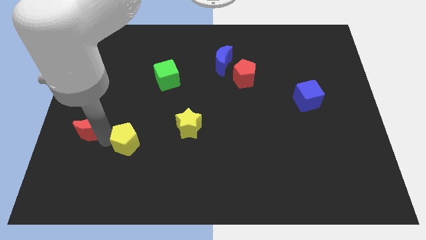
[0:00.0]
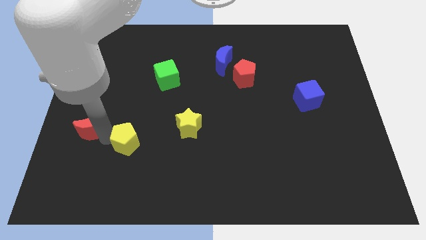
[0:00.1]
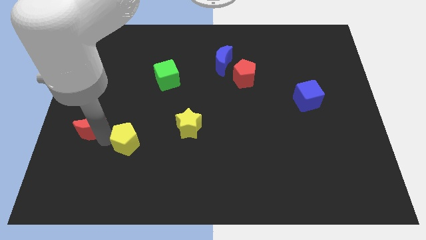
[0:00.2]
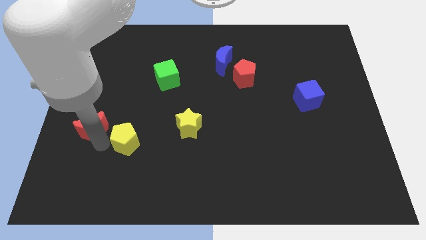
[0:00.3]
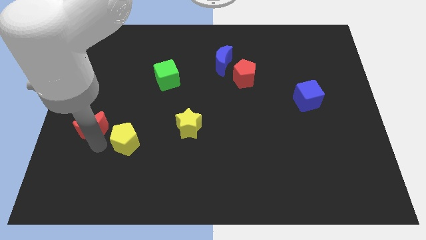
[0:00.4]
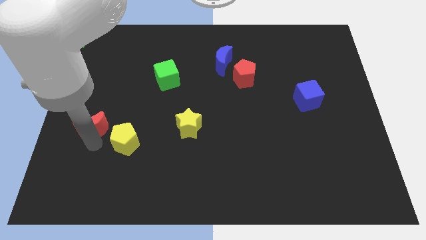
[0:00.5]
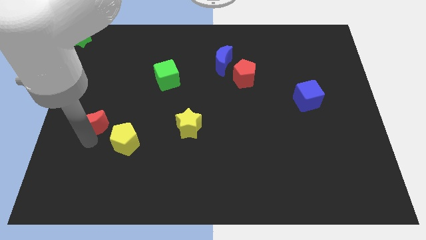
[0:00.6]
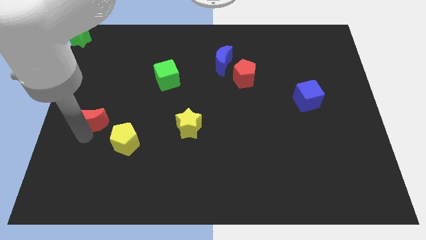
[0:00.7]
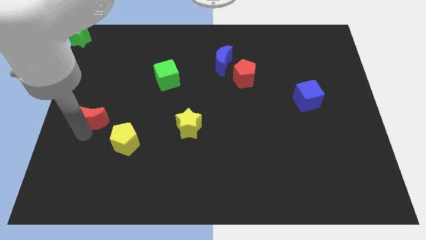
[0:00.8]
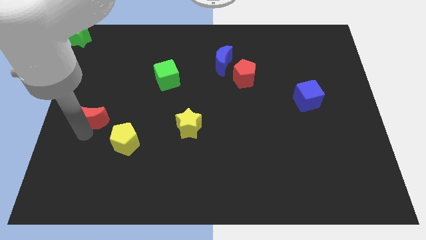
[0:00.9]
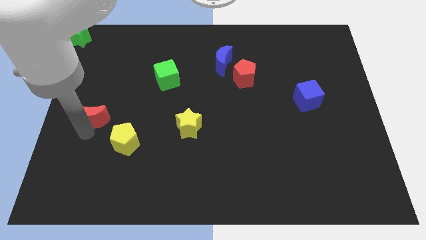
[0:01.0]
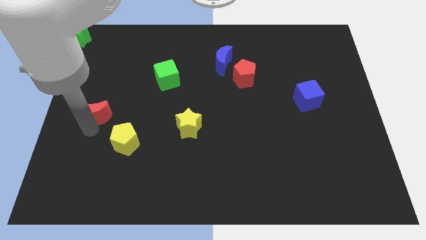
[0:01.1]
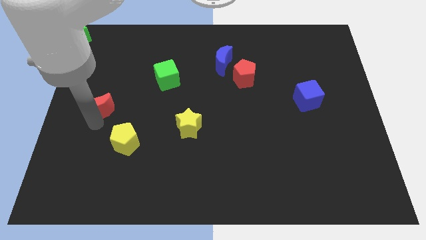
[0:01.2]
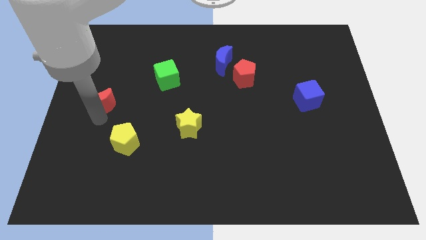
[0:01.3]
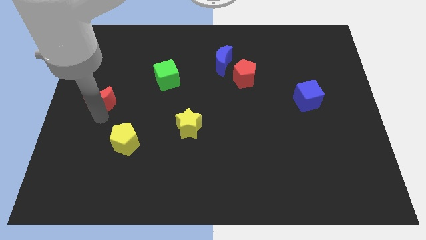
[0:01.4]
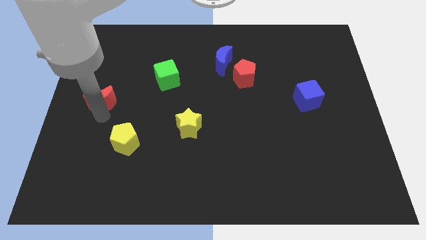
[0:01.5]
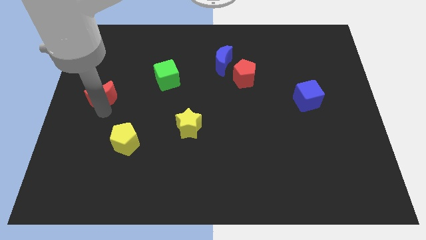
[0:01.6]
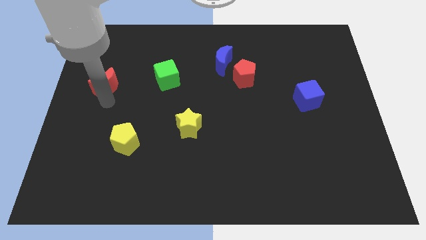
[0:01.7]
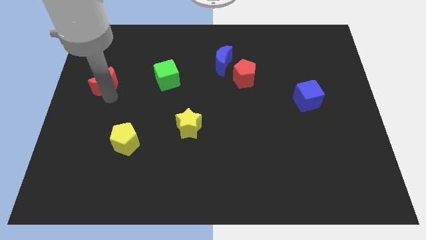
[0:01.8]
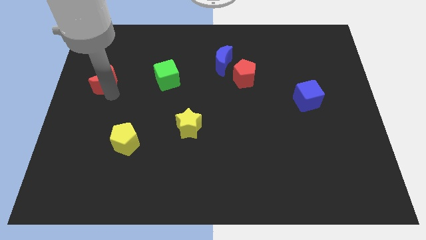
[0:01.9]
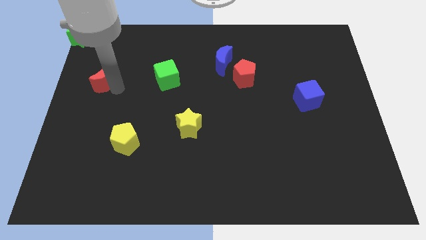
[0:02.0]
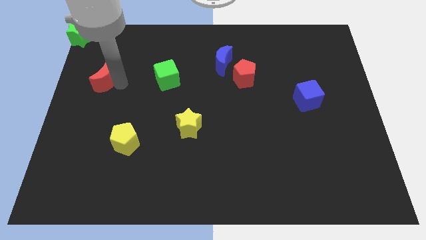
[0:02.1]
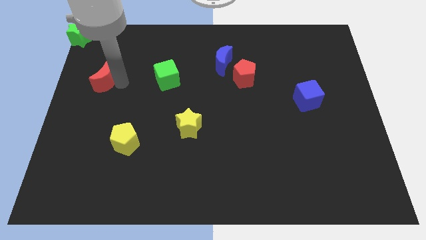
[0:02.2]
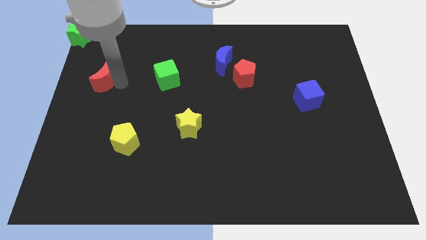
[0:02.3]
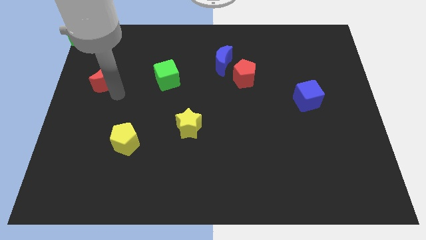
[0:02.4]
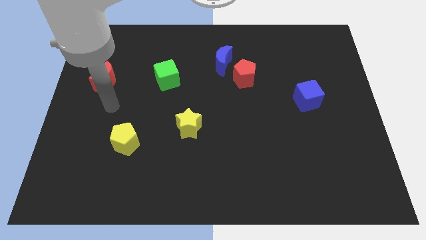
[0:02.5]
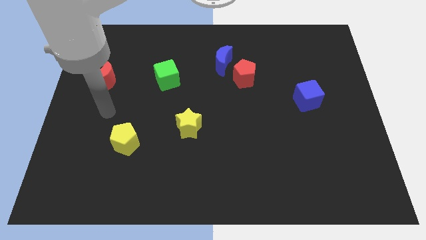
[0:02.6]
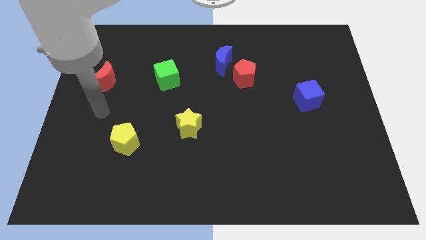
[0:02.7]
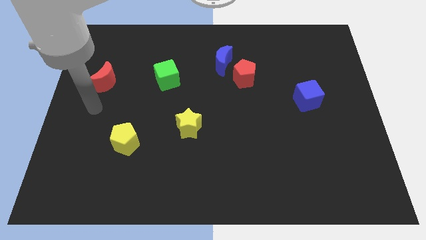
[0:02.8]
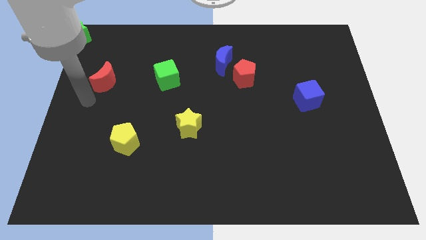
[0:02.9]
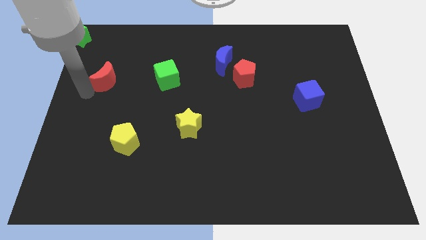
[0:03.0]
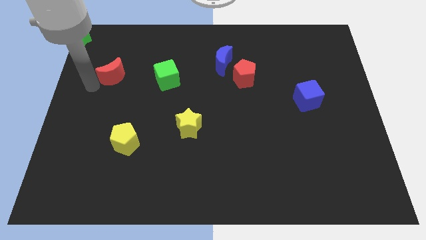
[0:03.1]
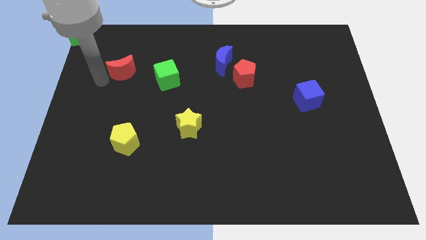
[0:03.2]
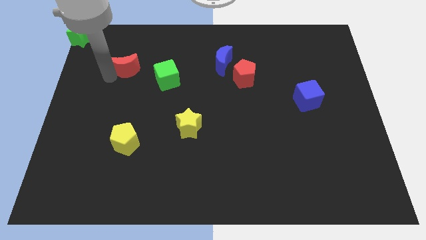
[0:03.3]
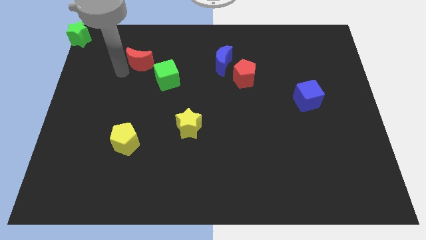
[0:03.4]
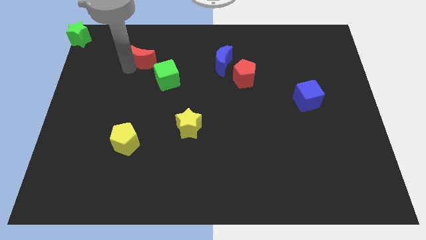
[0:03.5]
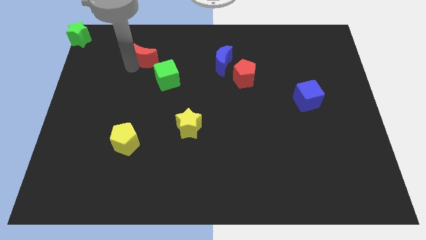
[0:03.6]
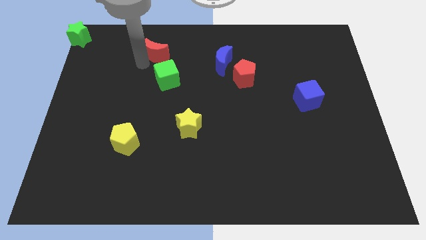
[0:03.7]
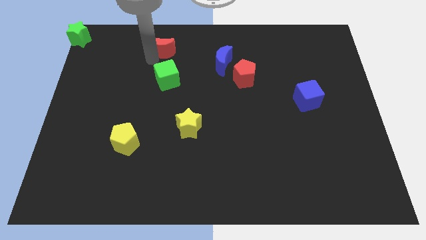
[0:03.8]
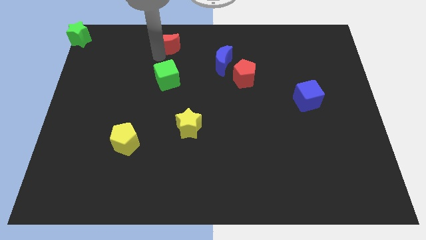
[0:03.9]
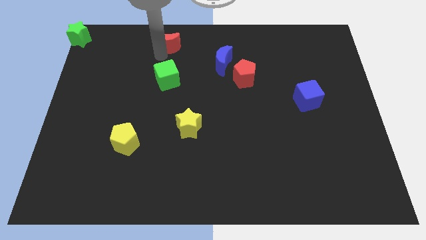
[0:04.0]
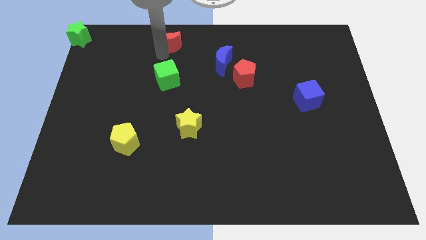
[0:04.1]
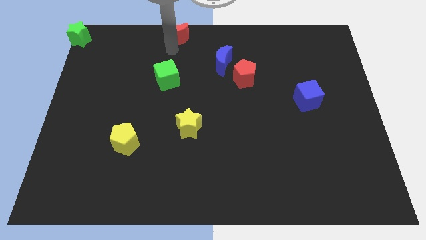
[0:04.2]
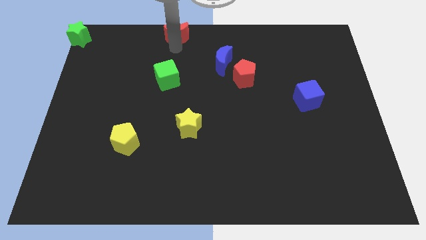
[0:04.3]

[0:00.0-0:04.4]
place red moon to the top of green cube

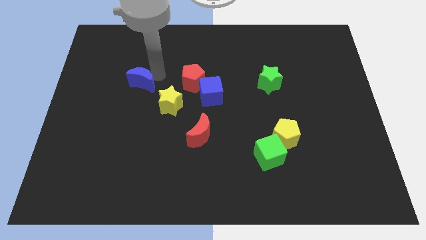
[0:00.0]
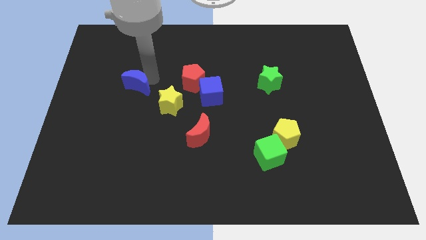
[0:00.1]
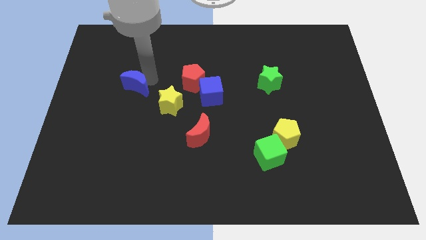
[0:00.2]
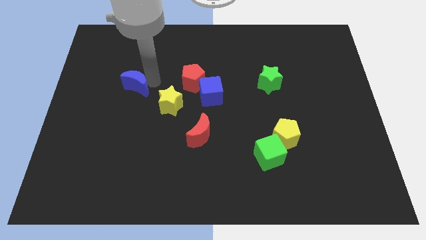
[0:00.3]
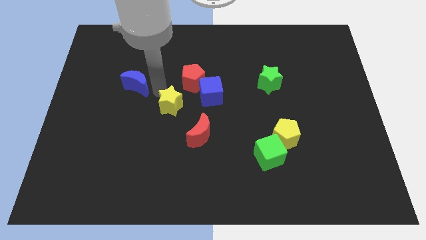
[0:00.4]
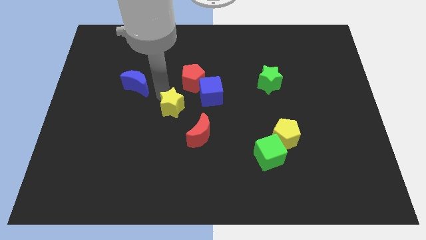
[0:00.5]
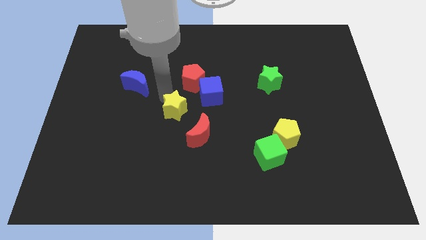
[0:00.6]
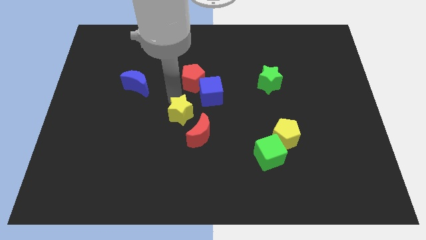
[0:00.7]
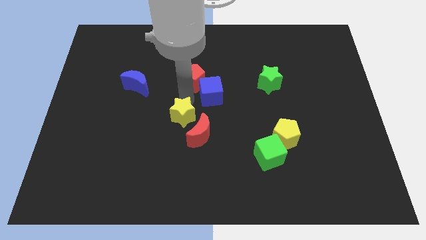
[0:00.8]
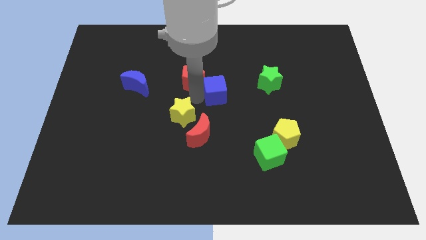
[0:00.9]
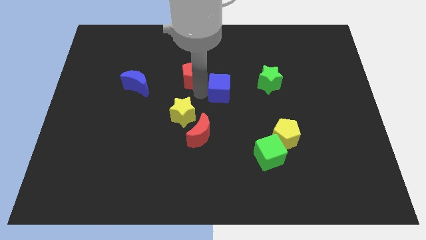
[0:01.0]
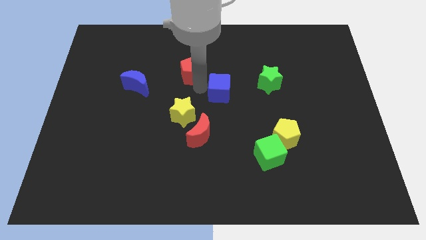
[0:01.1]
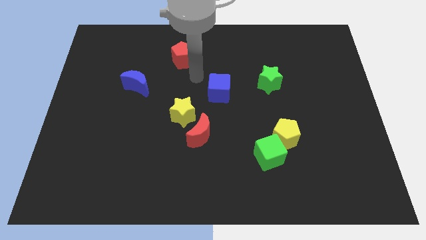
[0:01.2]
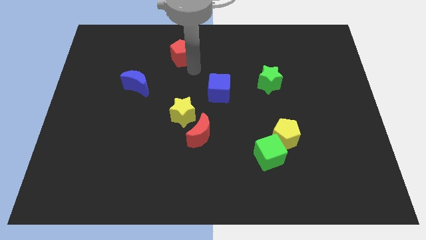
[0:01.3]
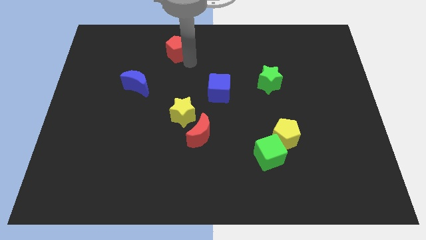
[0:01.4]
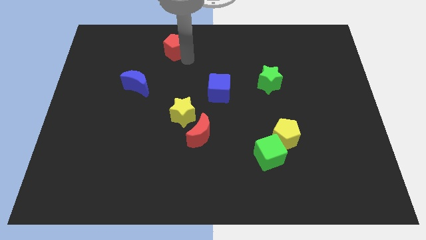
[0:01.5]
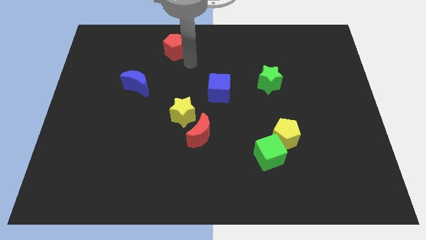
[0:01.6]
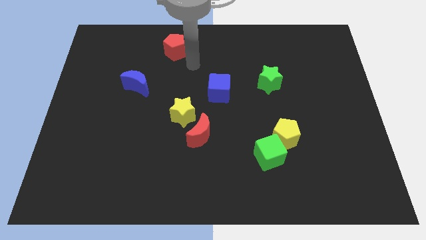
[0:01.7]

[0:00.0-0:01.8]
push the red pentagon slightly towards the top center of the board

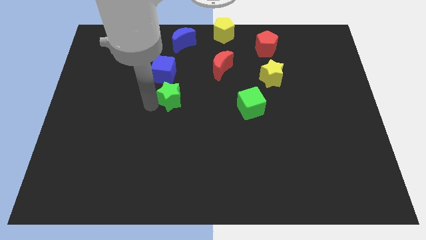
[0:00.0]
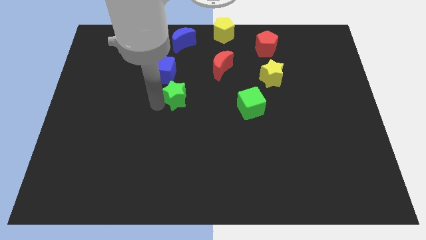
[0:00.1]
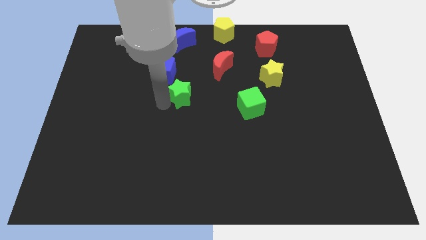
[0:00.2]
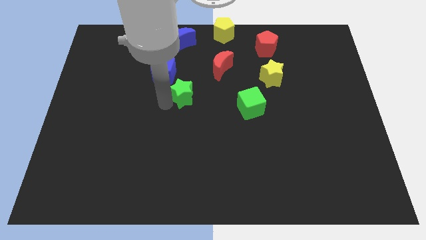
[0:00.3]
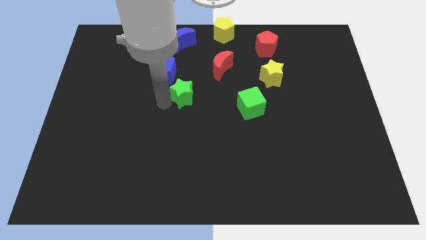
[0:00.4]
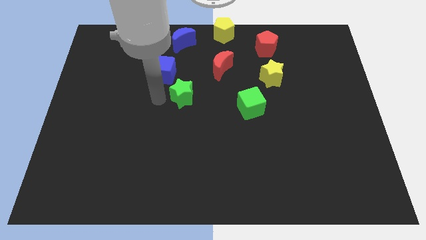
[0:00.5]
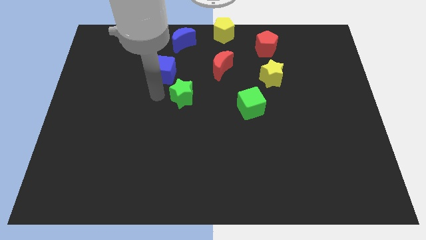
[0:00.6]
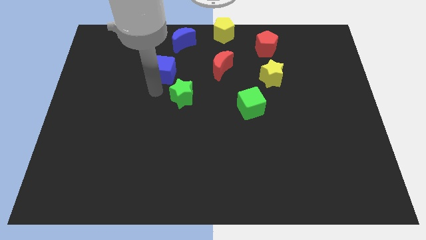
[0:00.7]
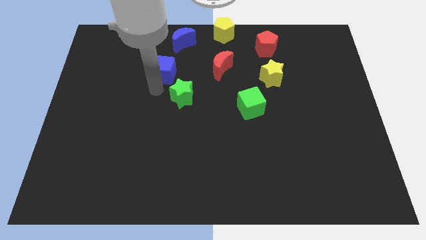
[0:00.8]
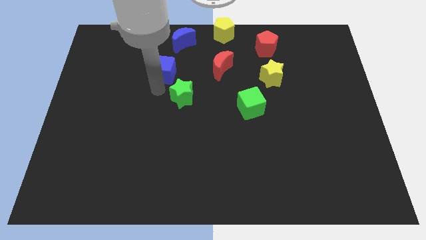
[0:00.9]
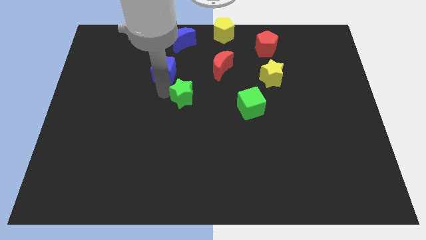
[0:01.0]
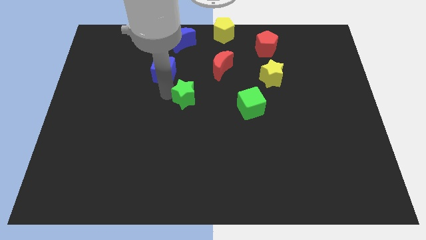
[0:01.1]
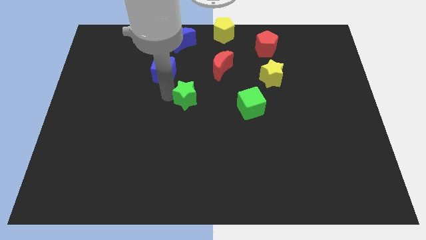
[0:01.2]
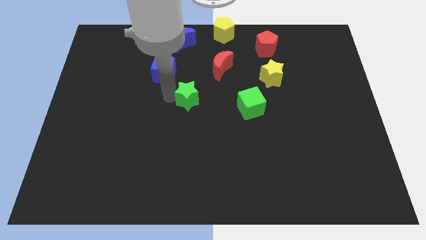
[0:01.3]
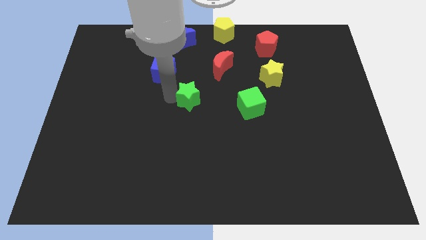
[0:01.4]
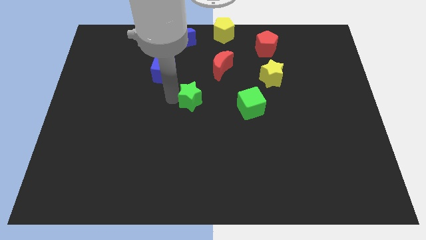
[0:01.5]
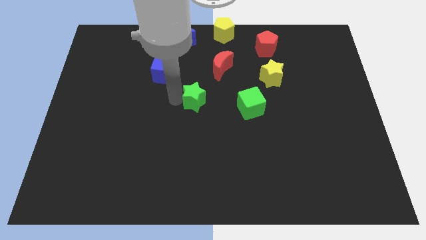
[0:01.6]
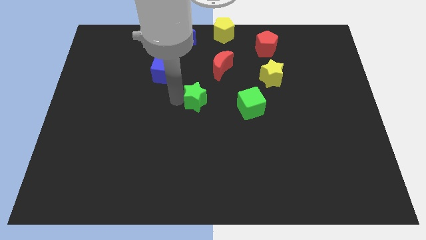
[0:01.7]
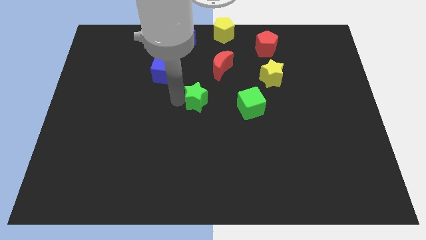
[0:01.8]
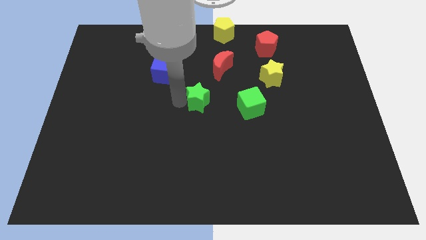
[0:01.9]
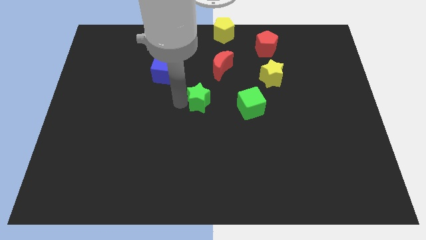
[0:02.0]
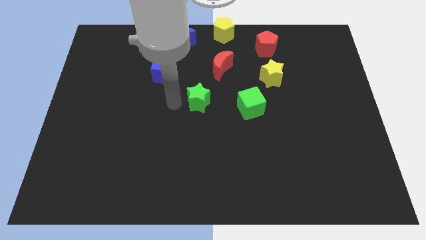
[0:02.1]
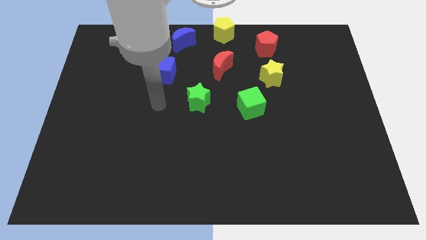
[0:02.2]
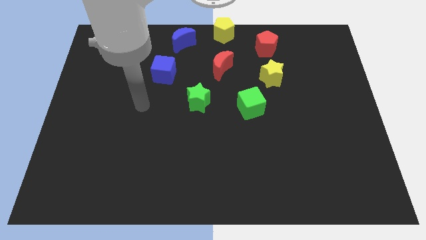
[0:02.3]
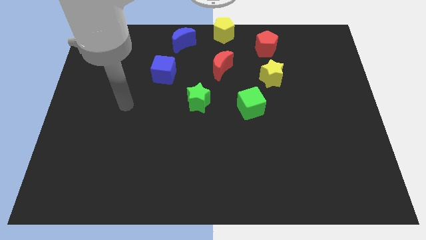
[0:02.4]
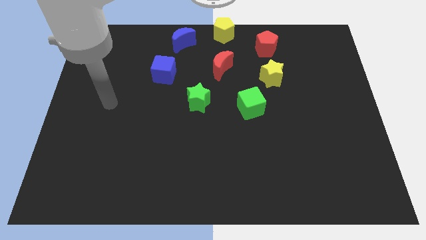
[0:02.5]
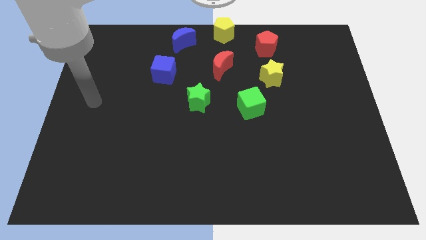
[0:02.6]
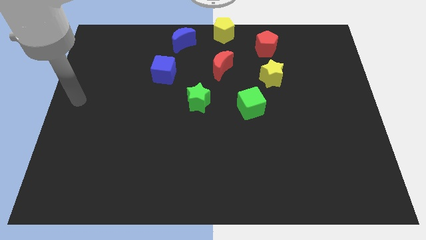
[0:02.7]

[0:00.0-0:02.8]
place green star below red crescent

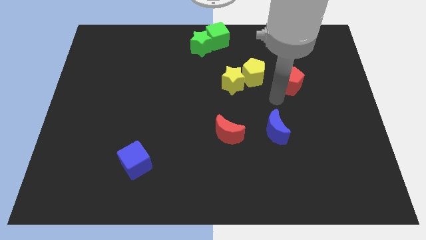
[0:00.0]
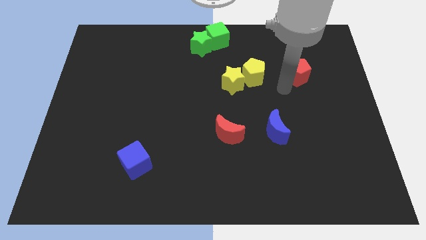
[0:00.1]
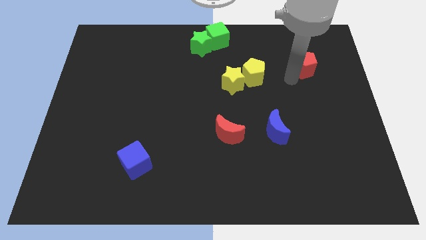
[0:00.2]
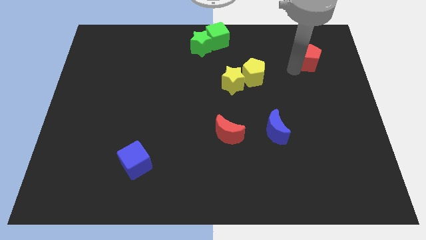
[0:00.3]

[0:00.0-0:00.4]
push the red pentagon slightly towards up
